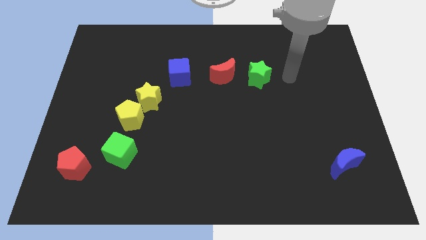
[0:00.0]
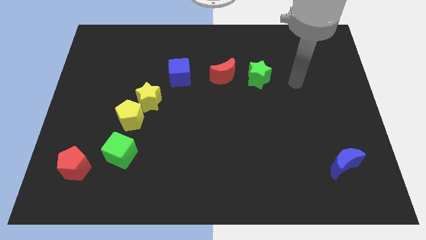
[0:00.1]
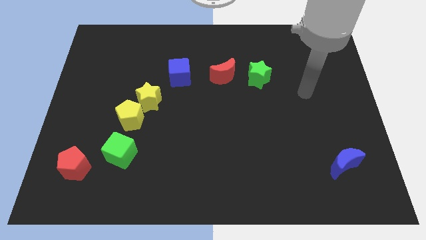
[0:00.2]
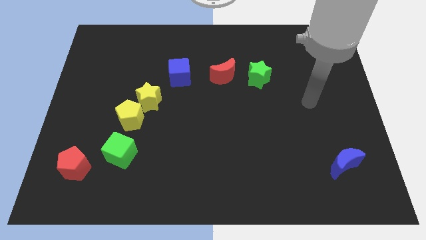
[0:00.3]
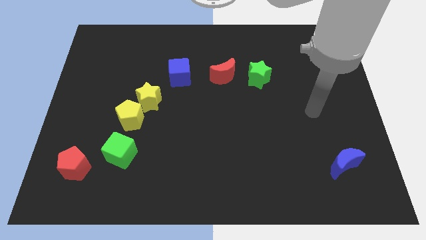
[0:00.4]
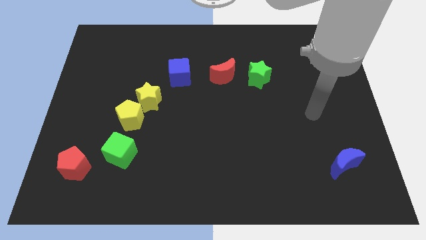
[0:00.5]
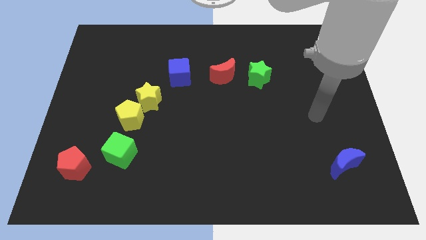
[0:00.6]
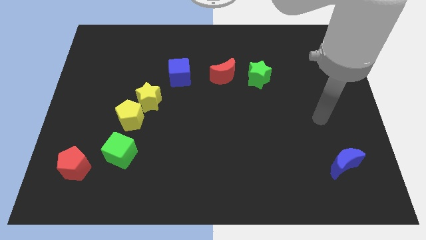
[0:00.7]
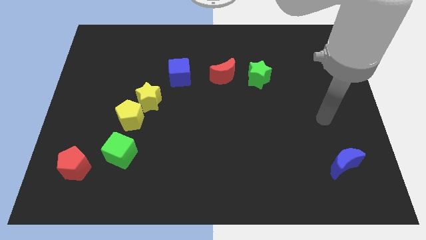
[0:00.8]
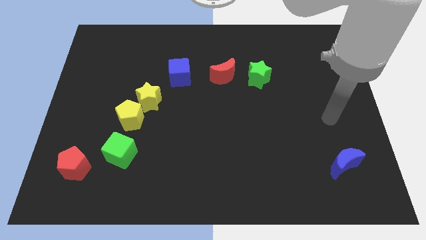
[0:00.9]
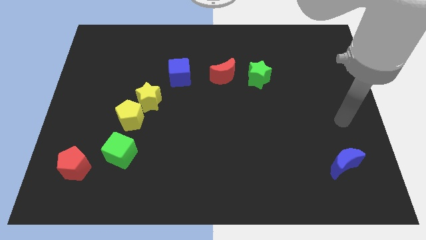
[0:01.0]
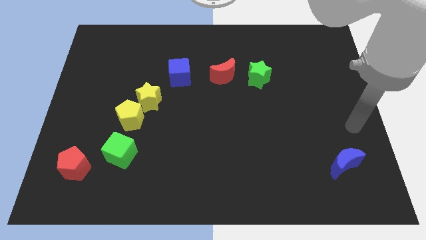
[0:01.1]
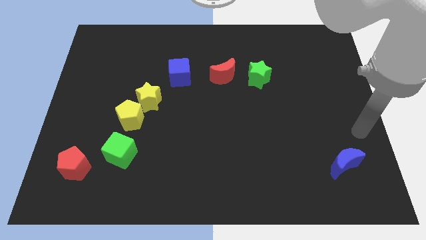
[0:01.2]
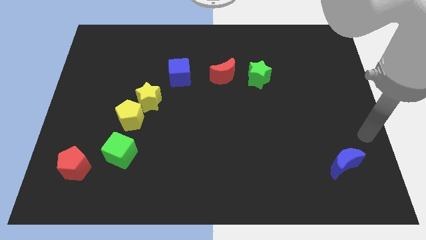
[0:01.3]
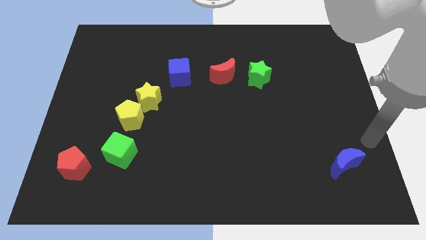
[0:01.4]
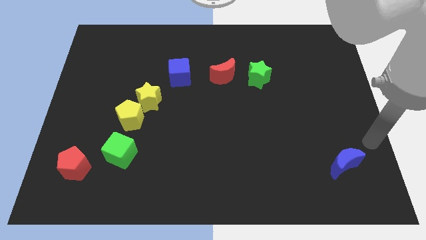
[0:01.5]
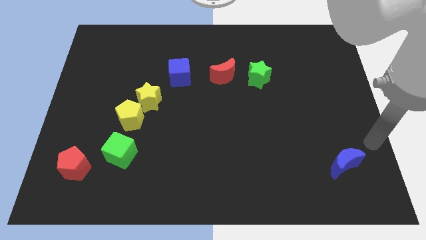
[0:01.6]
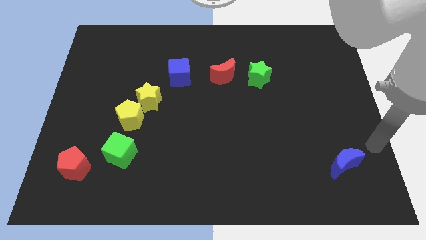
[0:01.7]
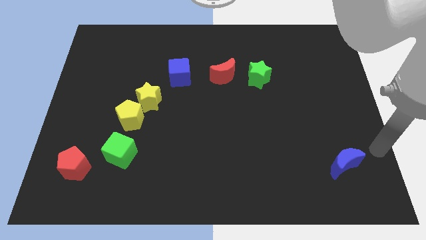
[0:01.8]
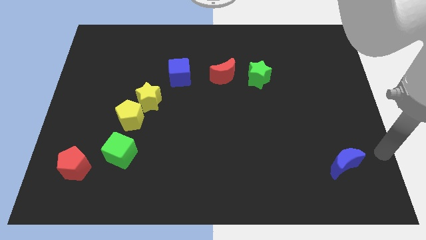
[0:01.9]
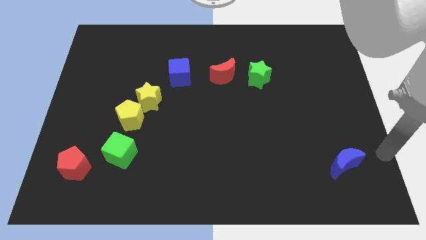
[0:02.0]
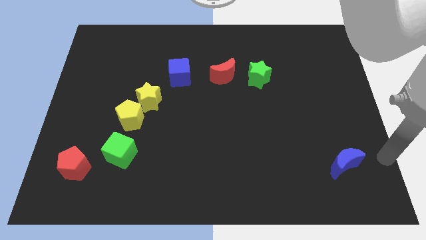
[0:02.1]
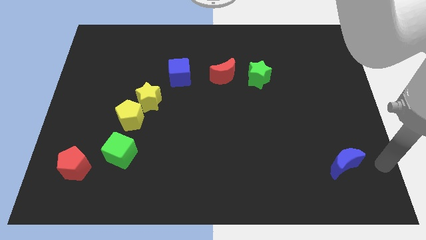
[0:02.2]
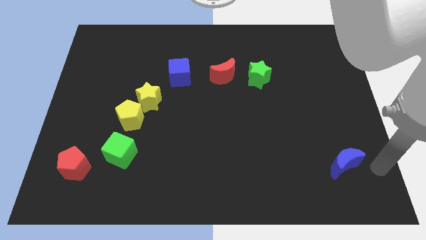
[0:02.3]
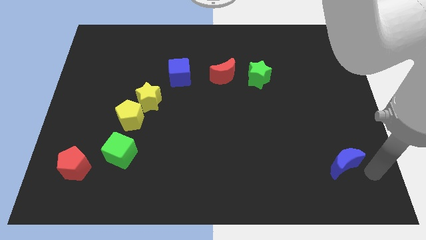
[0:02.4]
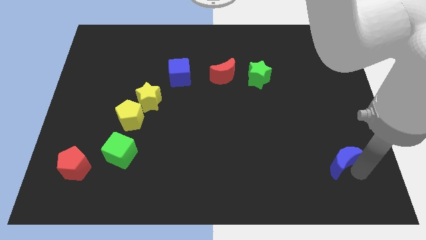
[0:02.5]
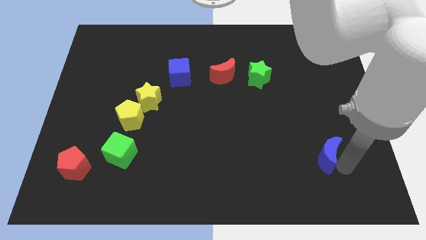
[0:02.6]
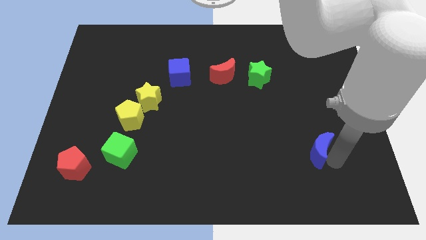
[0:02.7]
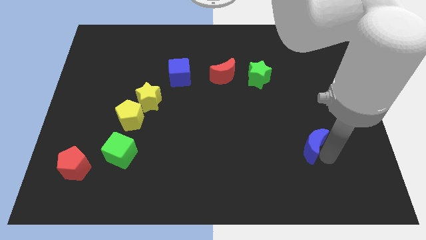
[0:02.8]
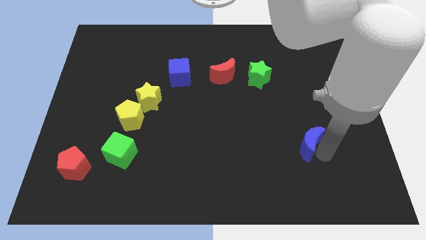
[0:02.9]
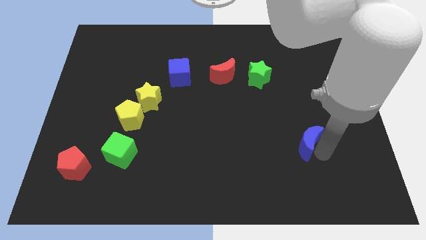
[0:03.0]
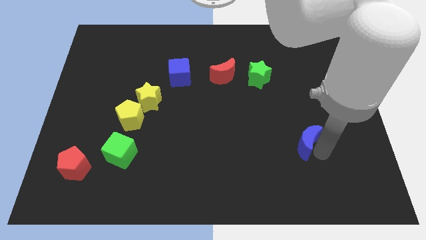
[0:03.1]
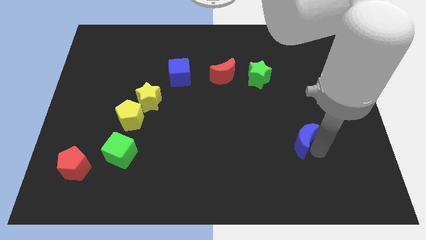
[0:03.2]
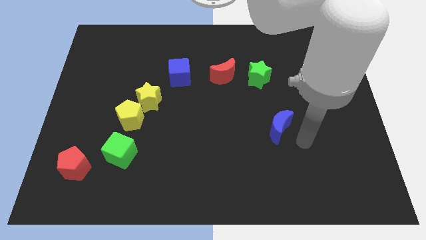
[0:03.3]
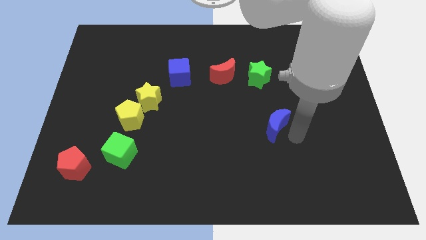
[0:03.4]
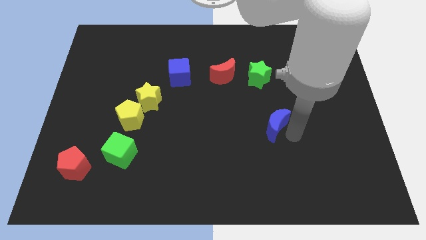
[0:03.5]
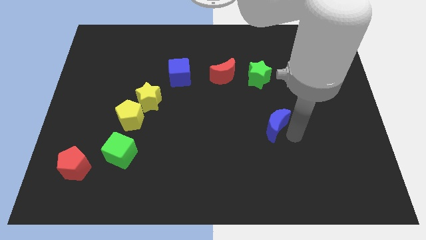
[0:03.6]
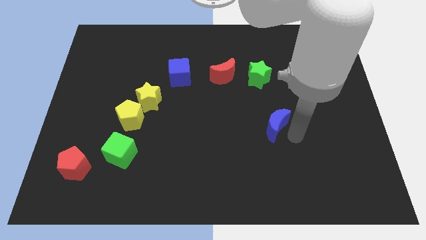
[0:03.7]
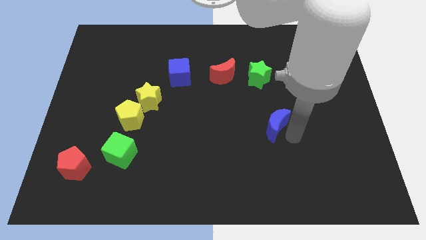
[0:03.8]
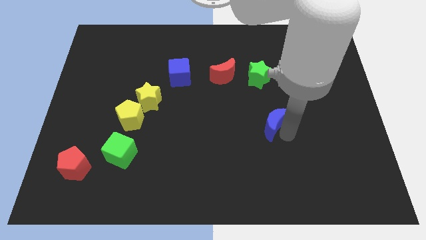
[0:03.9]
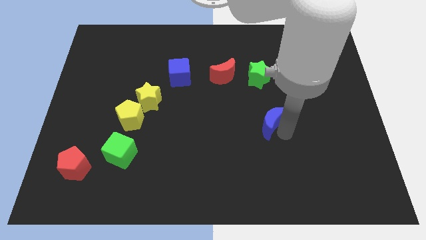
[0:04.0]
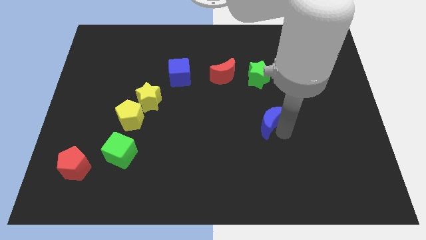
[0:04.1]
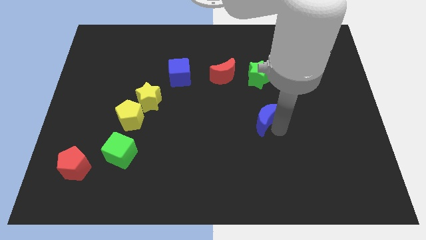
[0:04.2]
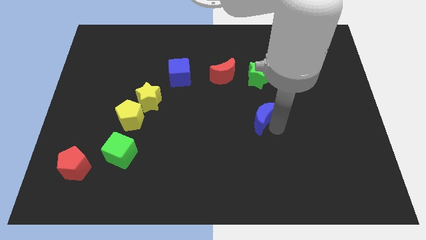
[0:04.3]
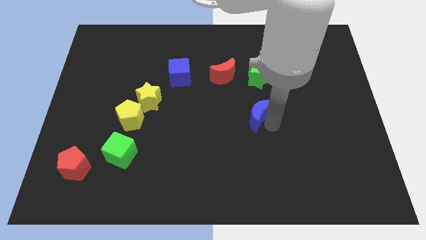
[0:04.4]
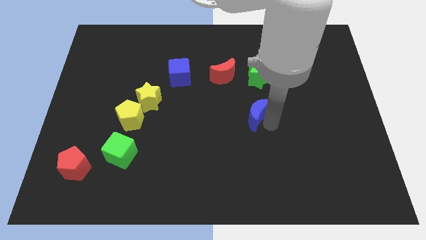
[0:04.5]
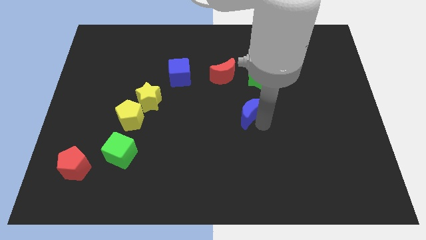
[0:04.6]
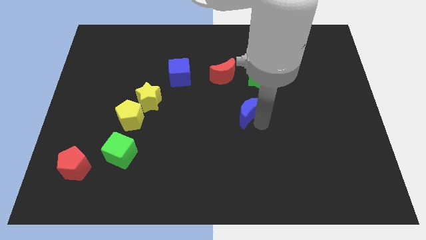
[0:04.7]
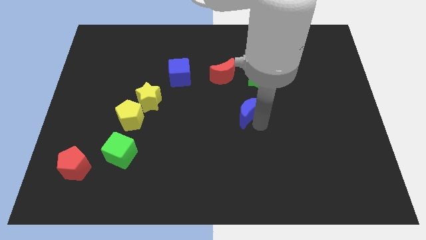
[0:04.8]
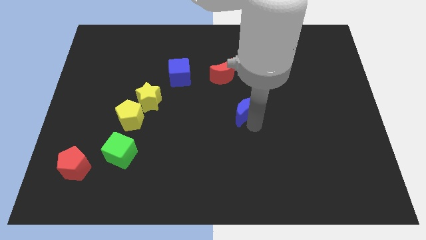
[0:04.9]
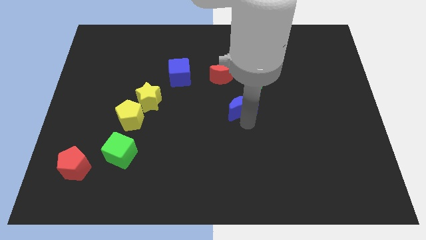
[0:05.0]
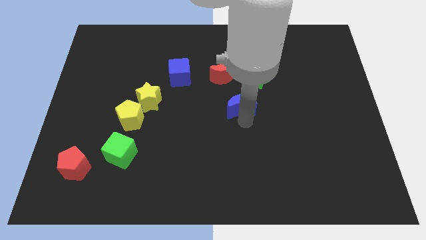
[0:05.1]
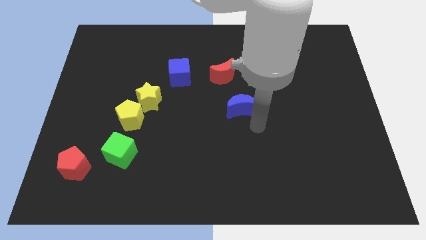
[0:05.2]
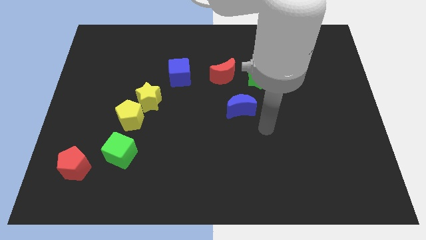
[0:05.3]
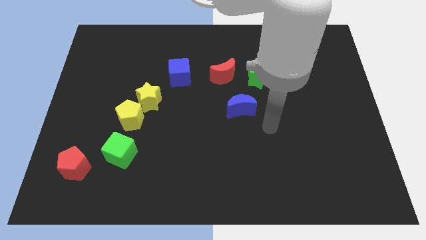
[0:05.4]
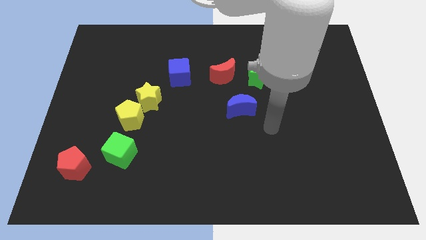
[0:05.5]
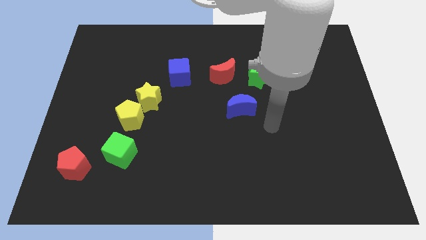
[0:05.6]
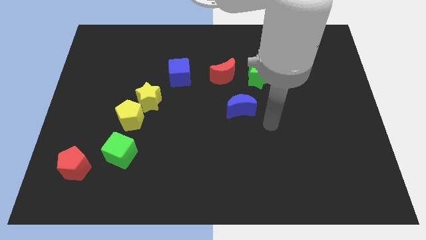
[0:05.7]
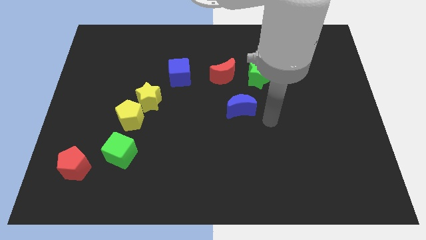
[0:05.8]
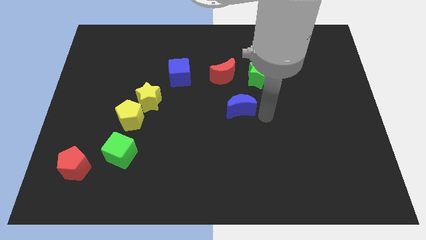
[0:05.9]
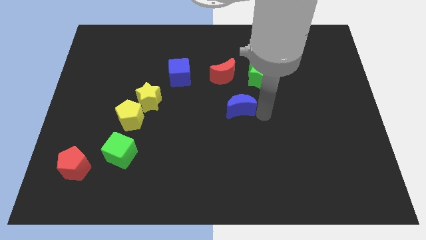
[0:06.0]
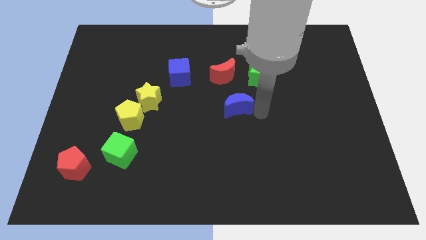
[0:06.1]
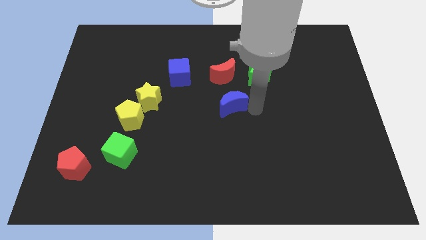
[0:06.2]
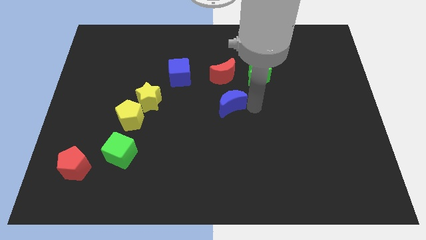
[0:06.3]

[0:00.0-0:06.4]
place the blue moon below the red moon

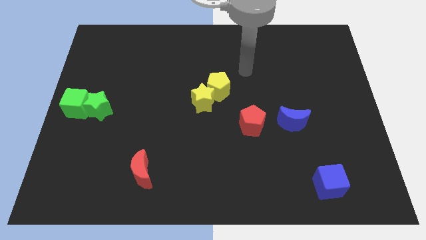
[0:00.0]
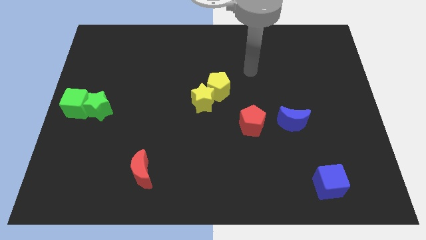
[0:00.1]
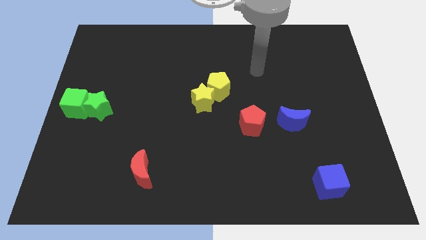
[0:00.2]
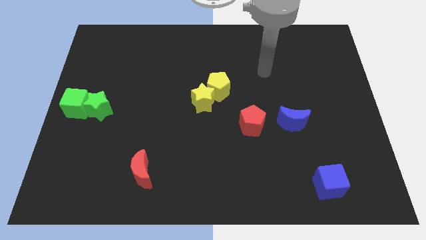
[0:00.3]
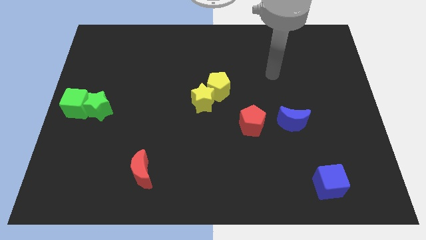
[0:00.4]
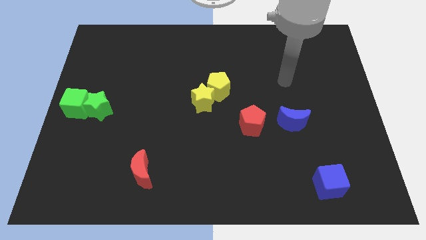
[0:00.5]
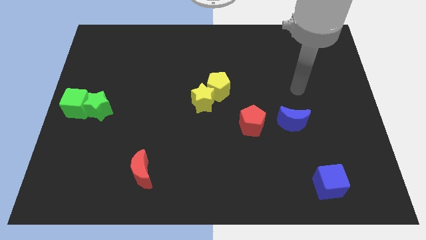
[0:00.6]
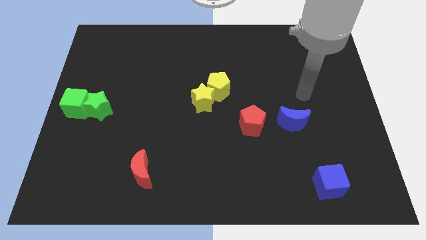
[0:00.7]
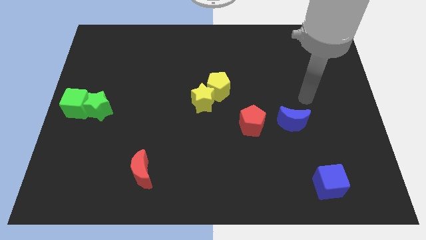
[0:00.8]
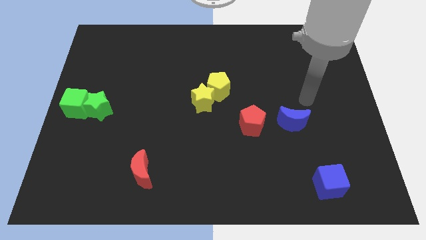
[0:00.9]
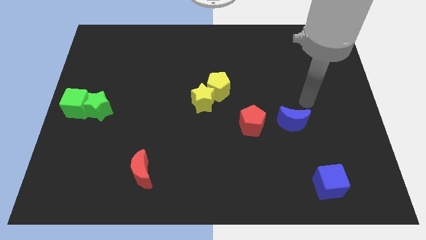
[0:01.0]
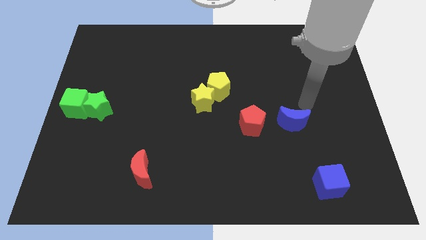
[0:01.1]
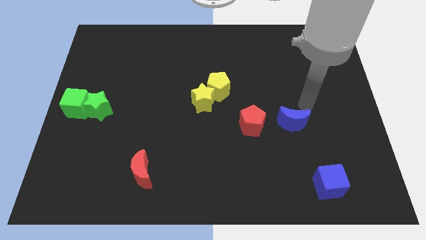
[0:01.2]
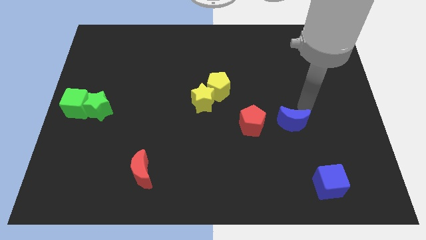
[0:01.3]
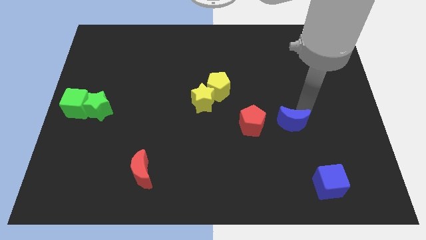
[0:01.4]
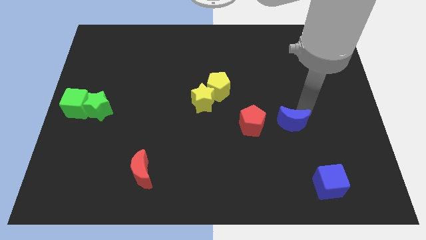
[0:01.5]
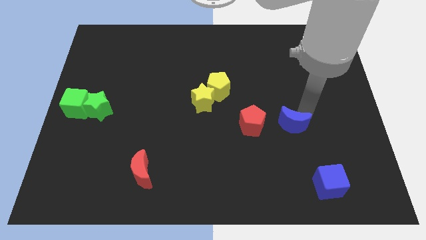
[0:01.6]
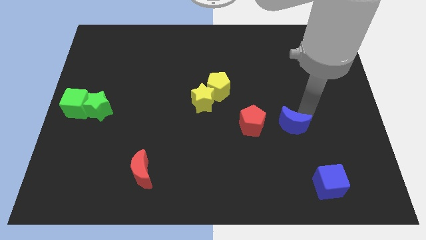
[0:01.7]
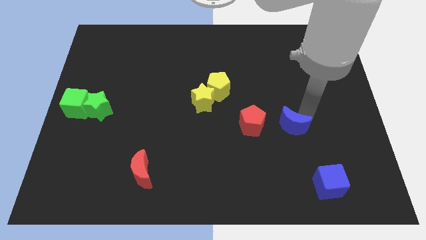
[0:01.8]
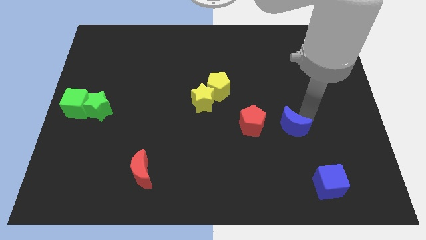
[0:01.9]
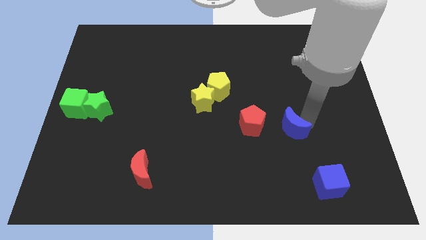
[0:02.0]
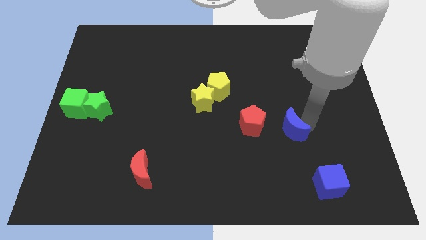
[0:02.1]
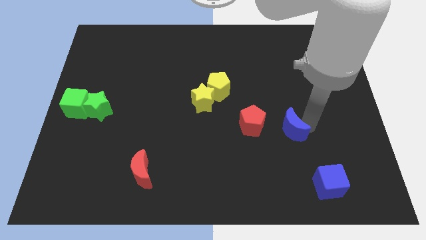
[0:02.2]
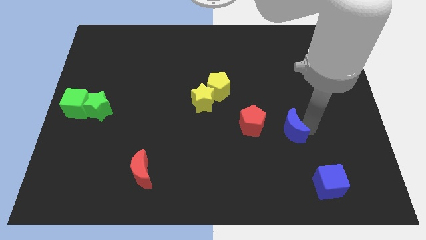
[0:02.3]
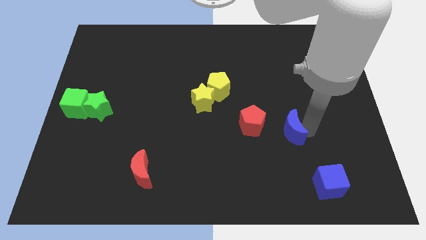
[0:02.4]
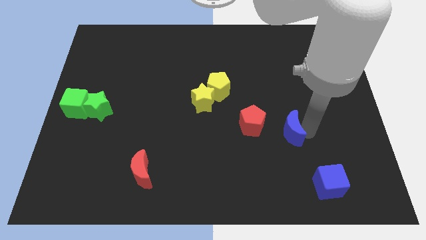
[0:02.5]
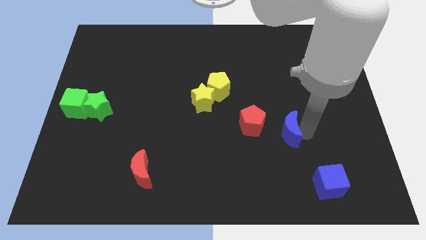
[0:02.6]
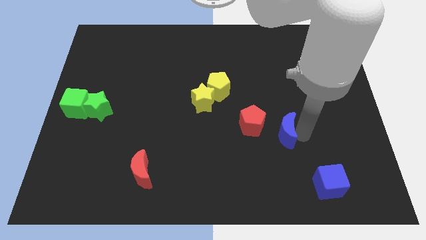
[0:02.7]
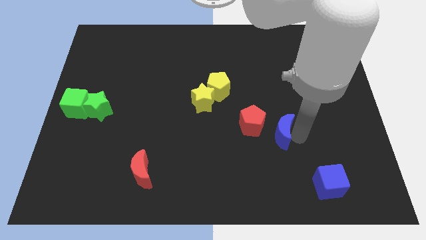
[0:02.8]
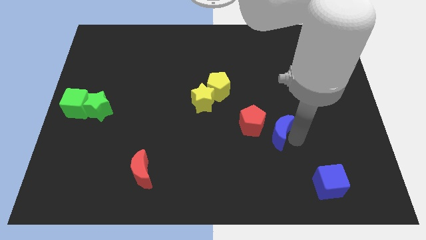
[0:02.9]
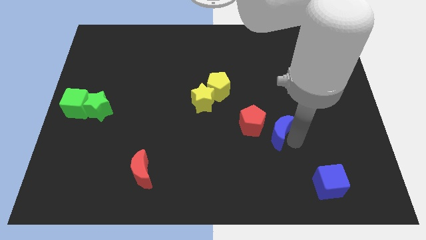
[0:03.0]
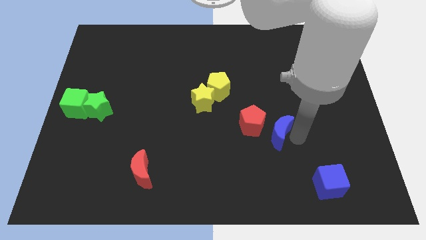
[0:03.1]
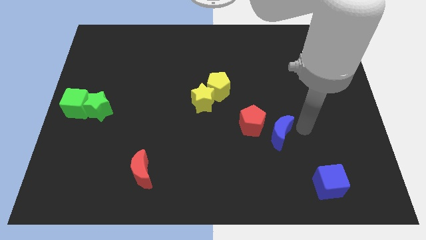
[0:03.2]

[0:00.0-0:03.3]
move the blue crescent to the top left side of the blue cube
